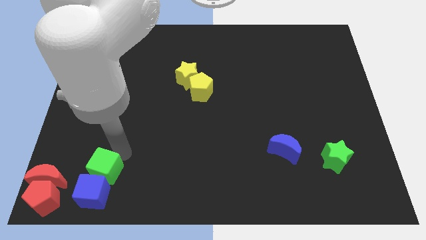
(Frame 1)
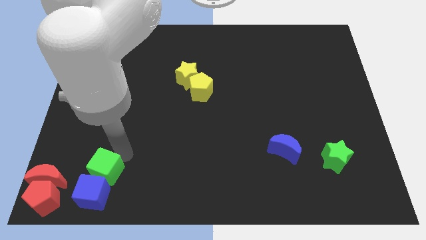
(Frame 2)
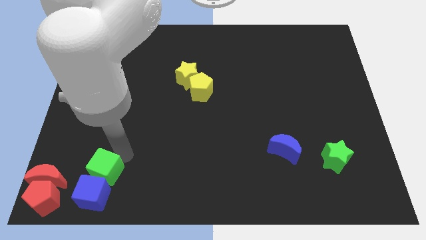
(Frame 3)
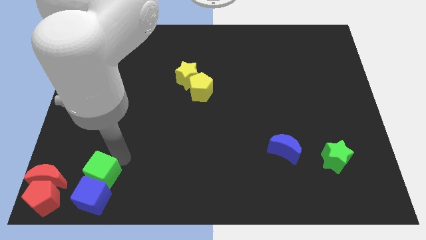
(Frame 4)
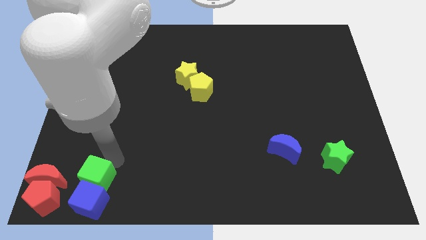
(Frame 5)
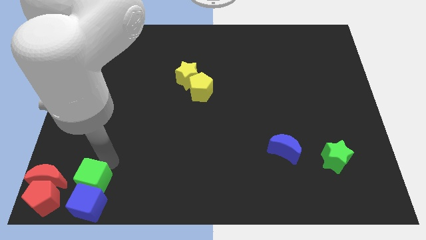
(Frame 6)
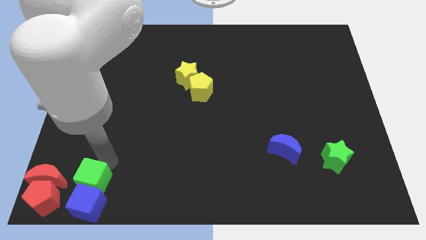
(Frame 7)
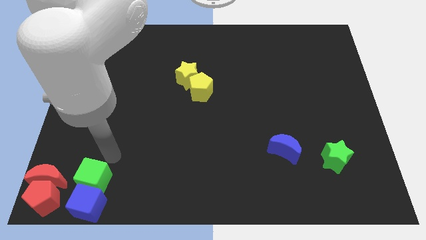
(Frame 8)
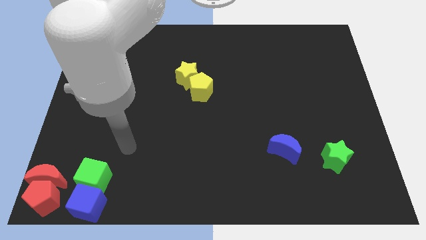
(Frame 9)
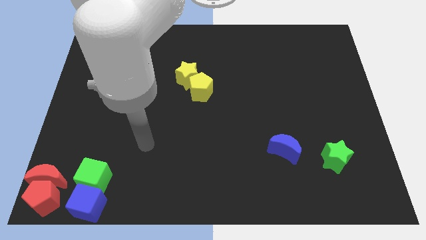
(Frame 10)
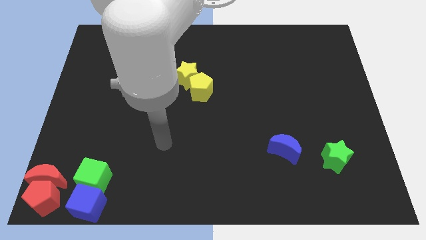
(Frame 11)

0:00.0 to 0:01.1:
slide the green cube slightly down

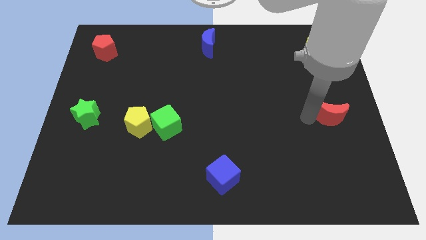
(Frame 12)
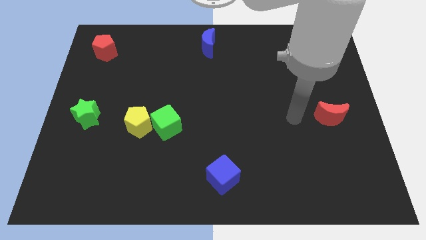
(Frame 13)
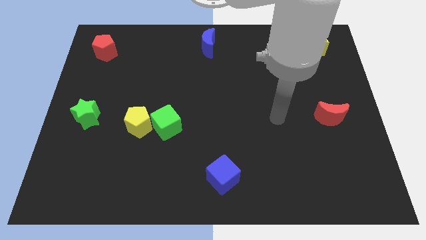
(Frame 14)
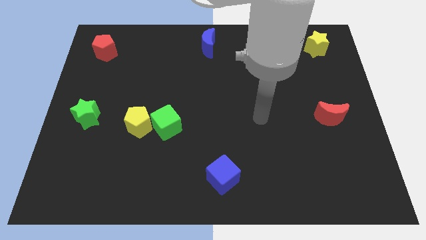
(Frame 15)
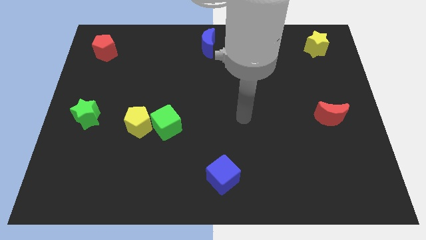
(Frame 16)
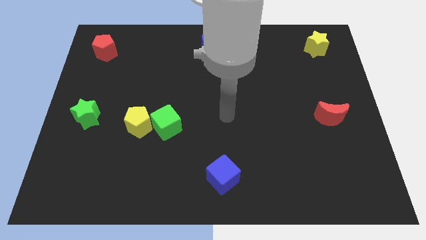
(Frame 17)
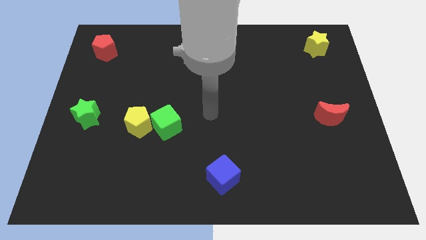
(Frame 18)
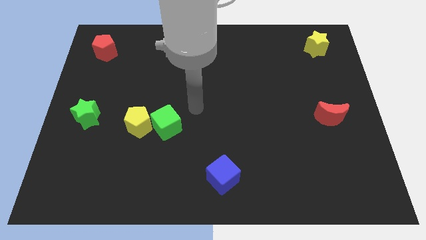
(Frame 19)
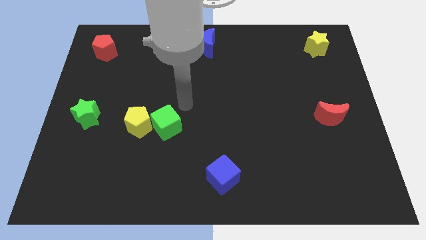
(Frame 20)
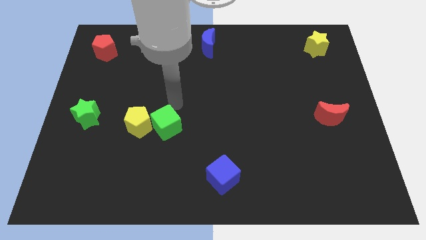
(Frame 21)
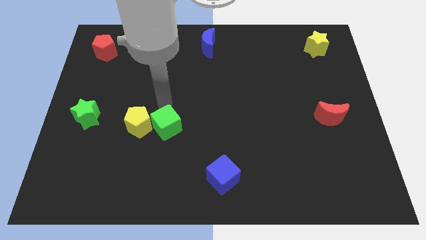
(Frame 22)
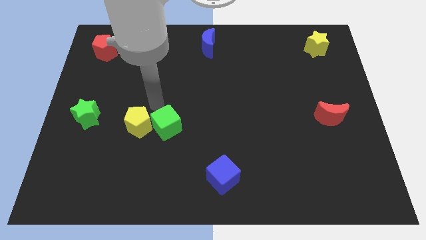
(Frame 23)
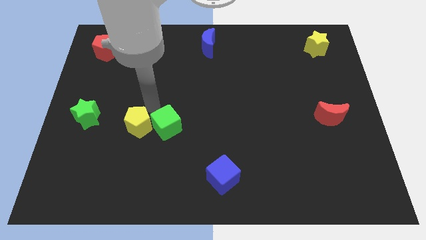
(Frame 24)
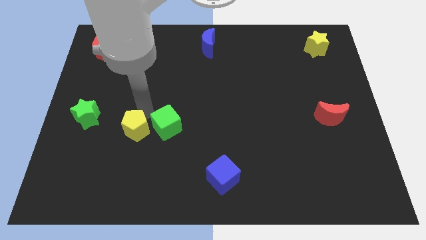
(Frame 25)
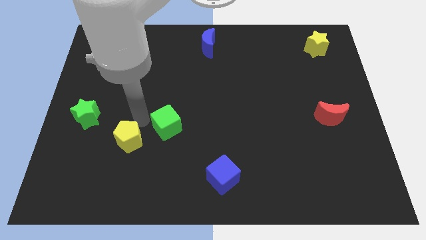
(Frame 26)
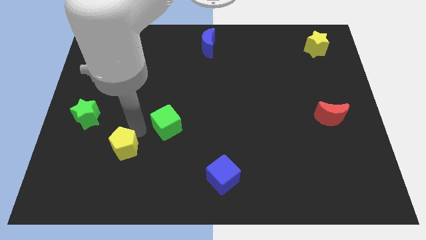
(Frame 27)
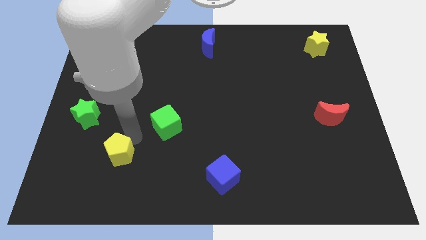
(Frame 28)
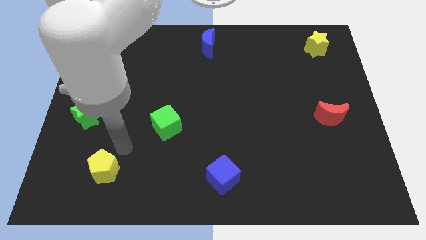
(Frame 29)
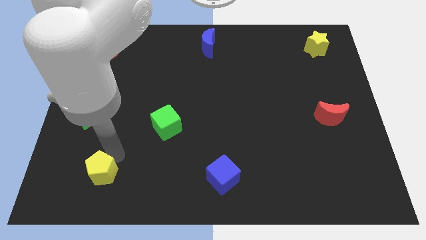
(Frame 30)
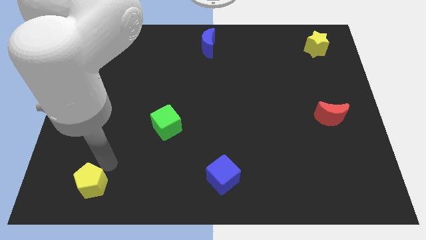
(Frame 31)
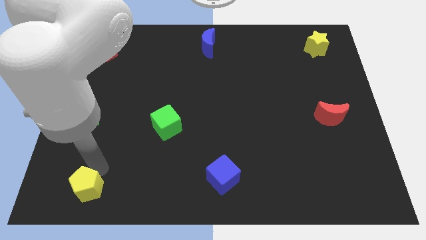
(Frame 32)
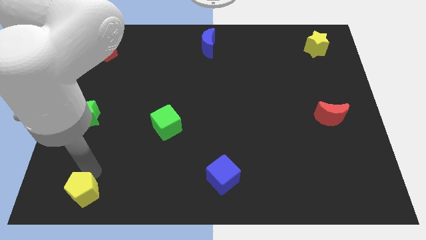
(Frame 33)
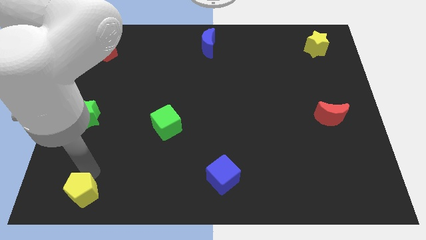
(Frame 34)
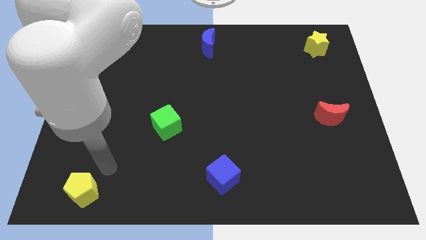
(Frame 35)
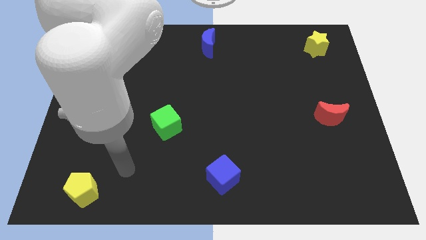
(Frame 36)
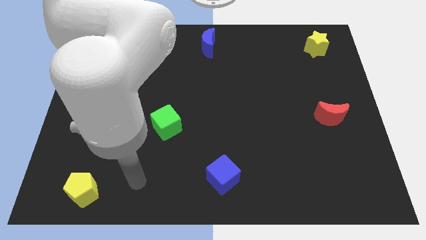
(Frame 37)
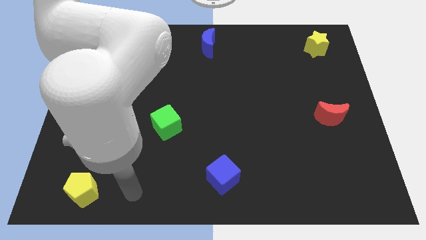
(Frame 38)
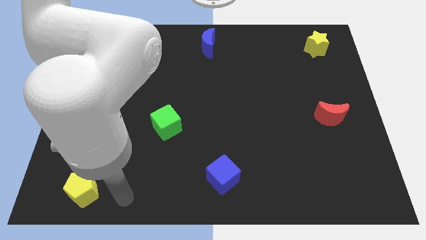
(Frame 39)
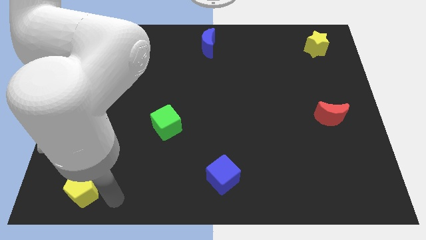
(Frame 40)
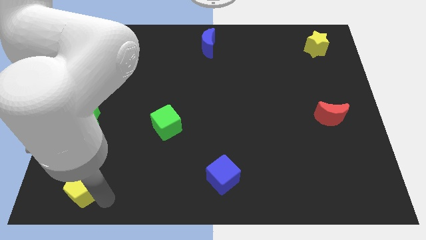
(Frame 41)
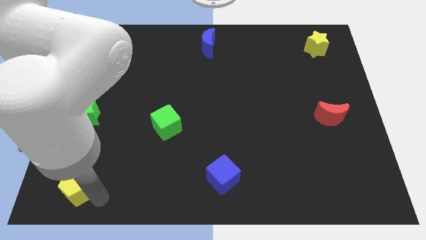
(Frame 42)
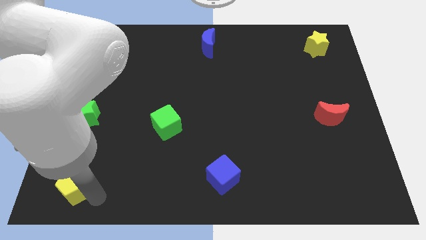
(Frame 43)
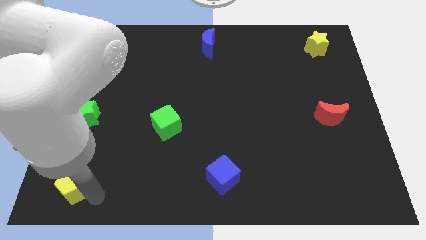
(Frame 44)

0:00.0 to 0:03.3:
move your arm away from the red crescent

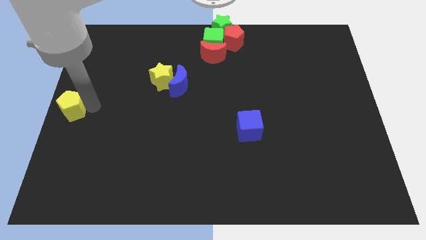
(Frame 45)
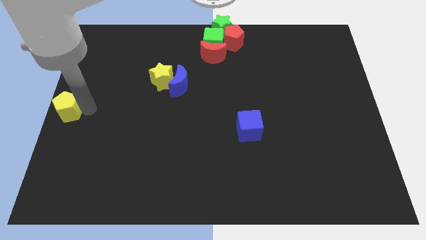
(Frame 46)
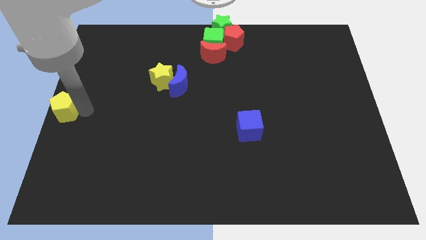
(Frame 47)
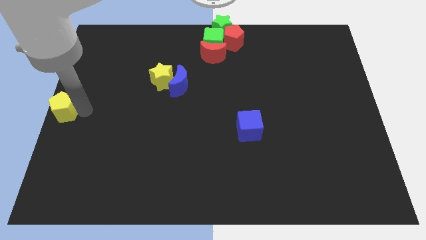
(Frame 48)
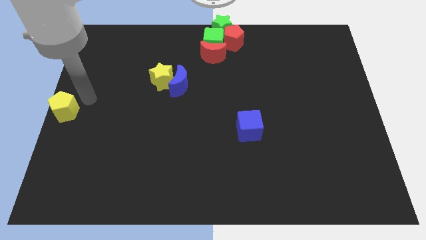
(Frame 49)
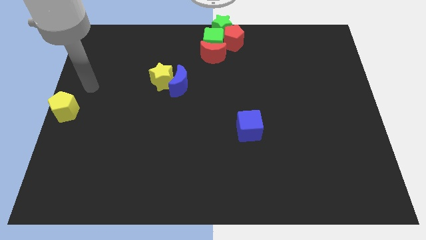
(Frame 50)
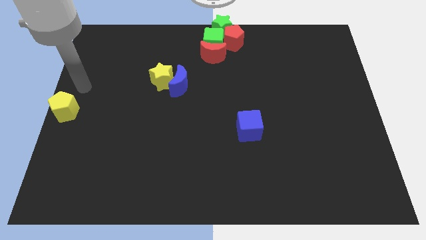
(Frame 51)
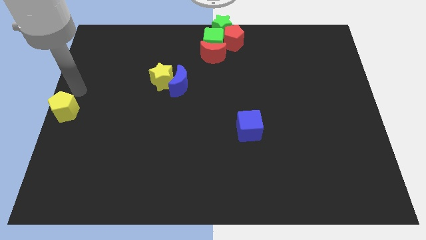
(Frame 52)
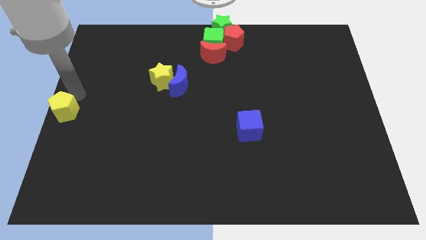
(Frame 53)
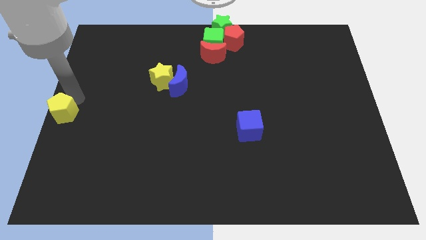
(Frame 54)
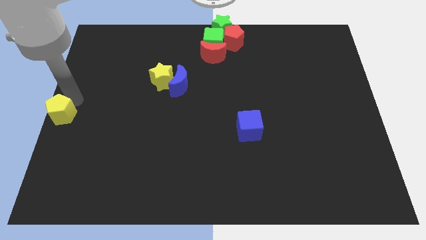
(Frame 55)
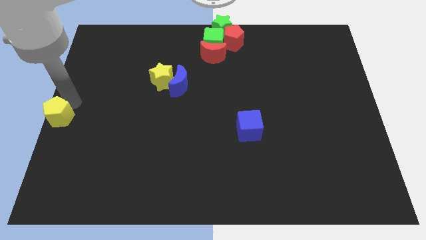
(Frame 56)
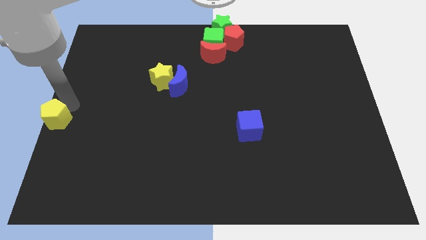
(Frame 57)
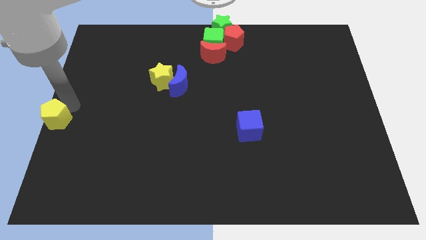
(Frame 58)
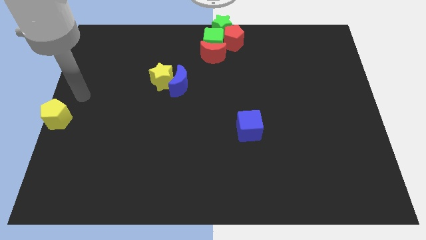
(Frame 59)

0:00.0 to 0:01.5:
place the yellow pentagon at the center left of the board

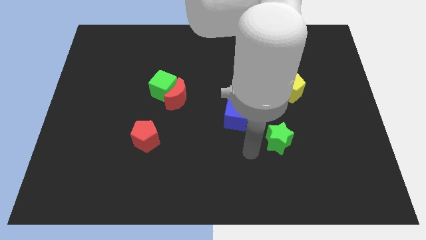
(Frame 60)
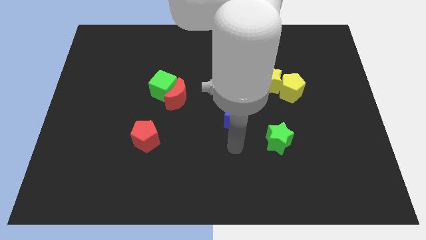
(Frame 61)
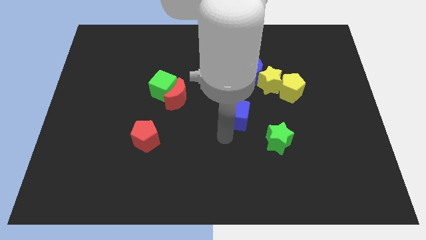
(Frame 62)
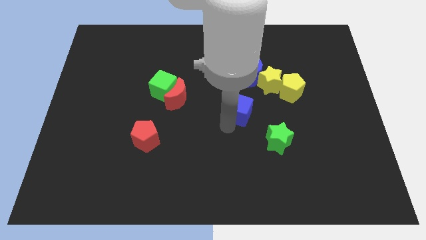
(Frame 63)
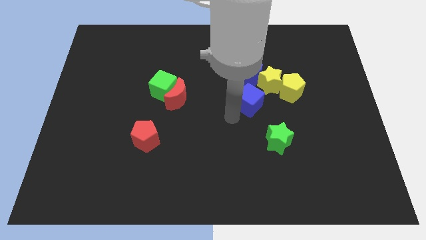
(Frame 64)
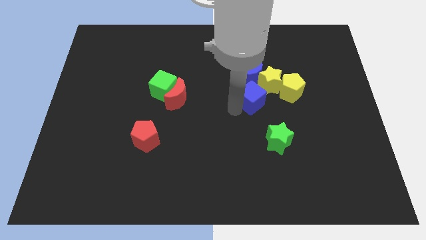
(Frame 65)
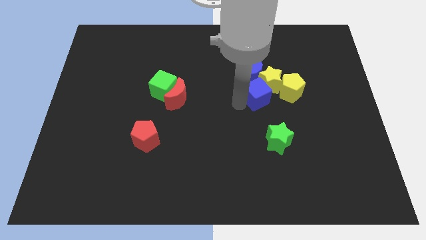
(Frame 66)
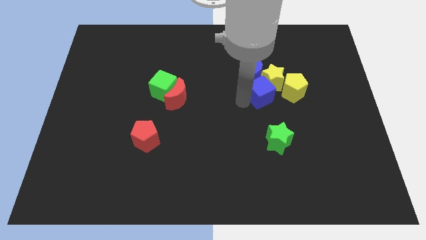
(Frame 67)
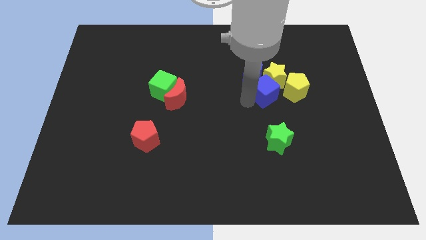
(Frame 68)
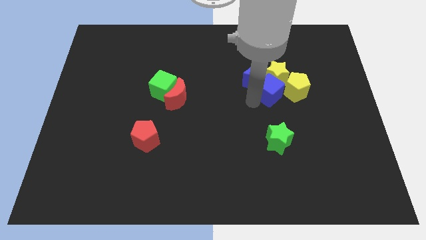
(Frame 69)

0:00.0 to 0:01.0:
move the blue cube into the yellow star

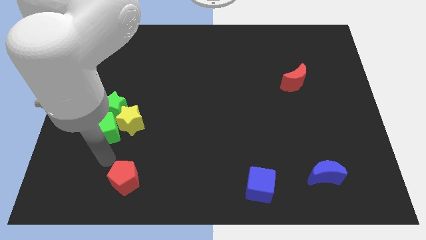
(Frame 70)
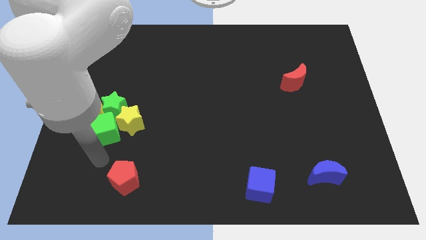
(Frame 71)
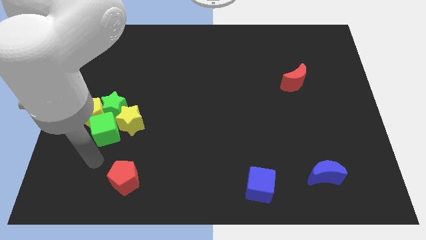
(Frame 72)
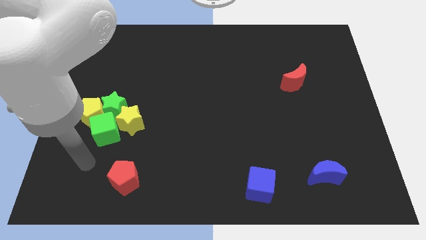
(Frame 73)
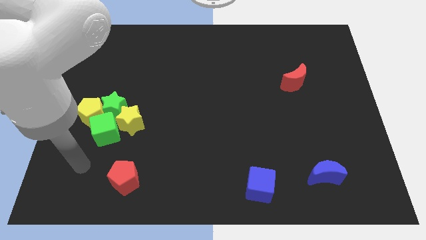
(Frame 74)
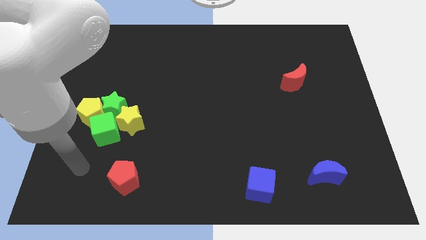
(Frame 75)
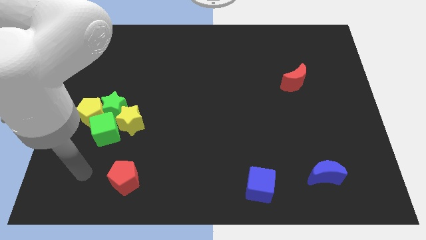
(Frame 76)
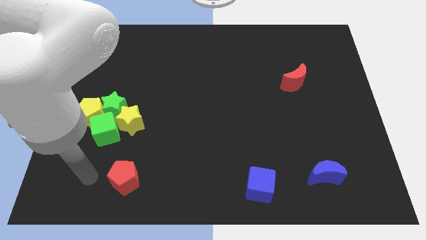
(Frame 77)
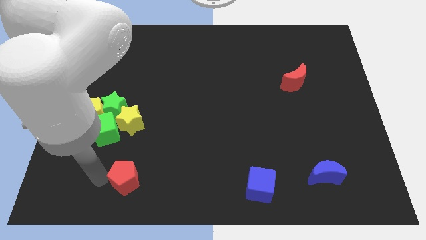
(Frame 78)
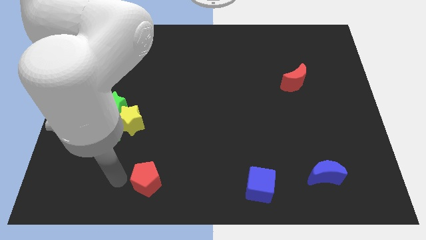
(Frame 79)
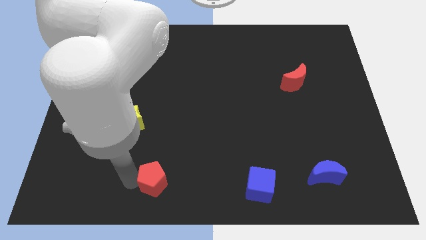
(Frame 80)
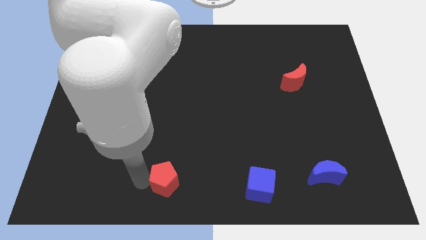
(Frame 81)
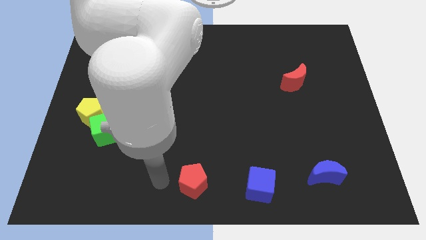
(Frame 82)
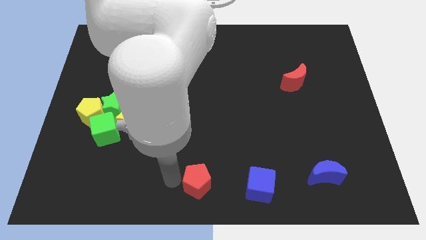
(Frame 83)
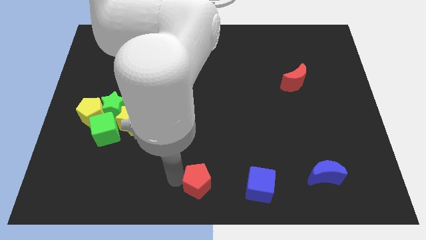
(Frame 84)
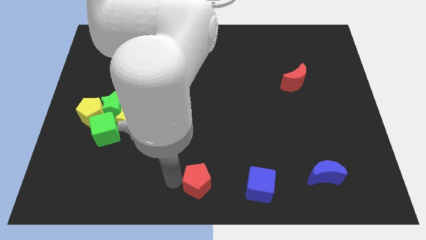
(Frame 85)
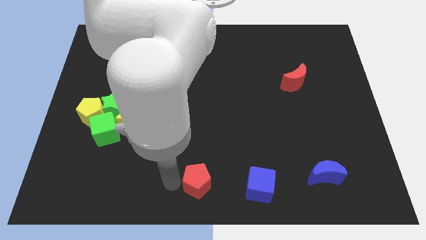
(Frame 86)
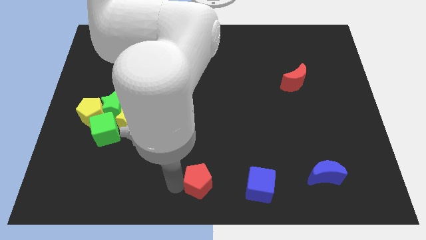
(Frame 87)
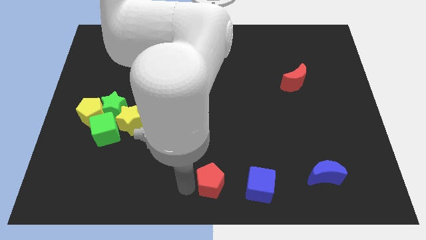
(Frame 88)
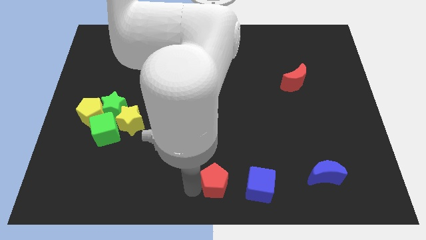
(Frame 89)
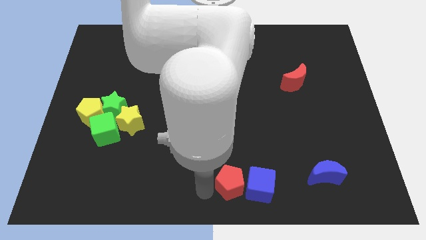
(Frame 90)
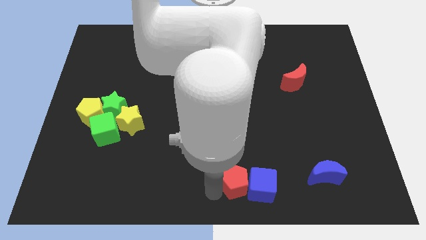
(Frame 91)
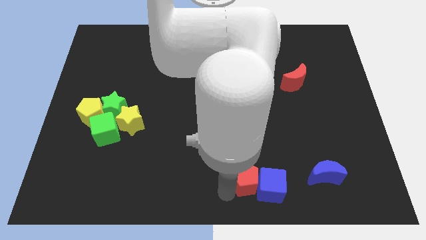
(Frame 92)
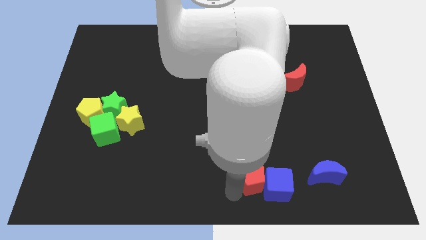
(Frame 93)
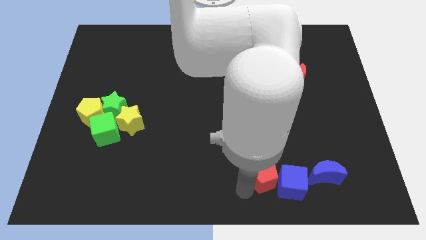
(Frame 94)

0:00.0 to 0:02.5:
push the red crescent beside the left to the blue cube
